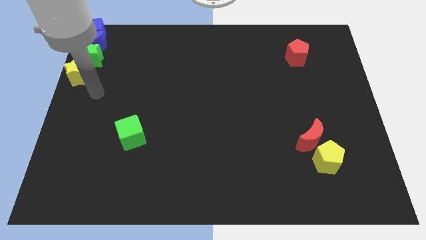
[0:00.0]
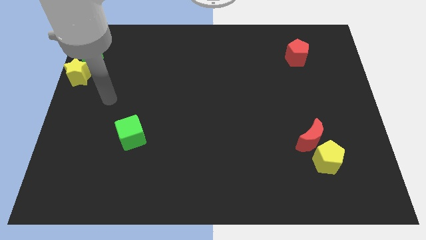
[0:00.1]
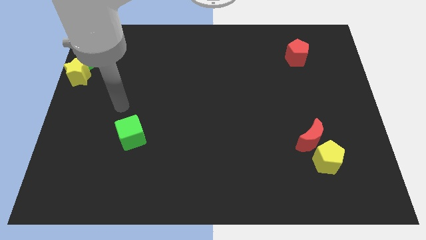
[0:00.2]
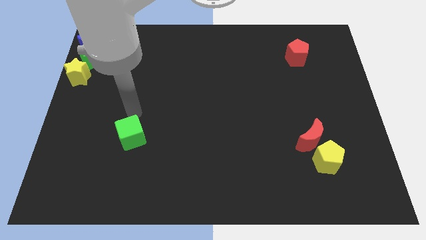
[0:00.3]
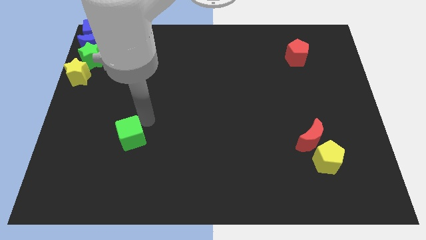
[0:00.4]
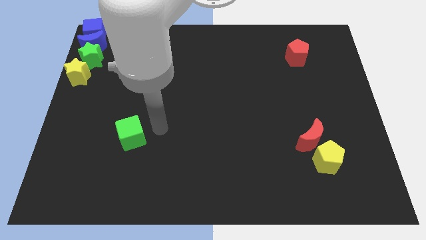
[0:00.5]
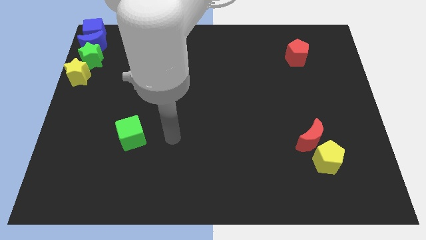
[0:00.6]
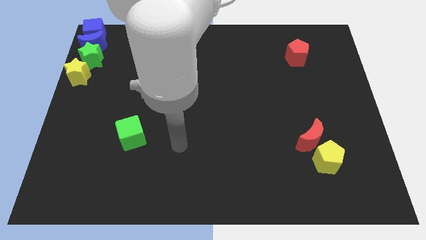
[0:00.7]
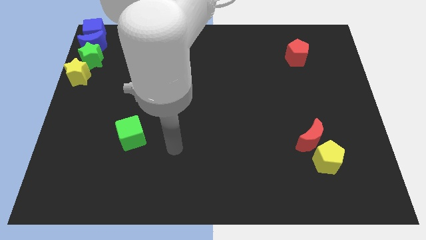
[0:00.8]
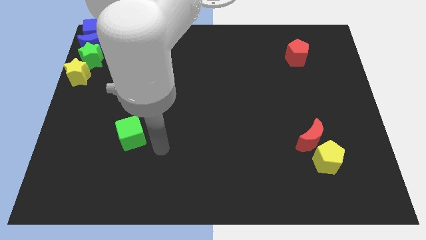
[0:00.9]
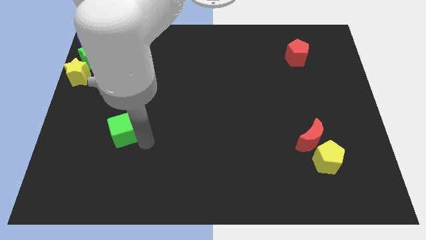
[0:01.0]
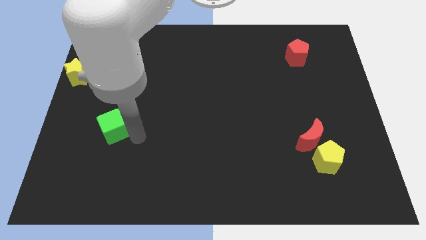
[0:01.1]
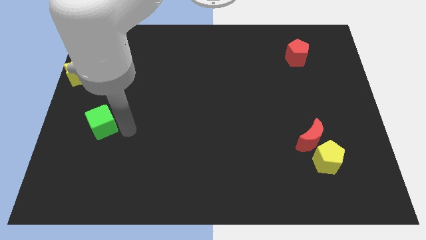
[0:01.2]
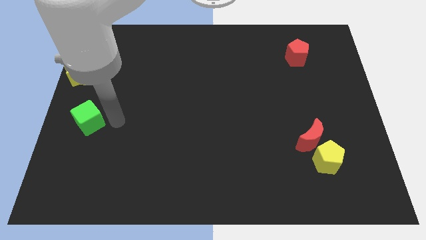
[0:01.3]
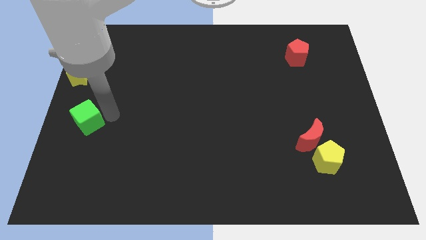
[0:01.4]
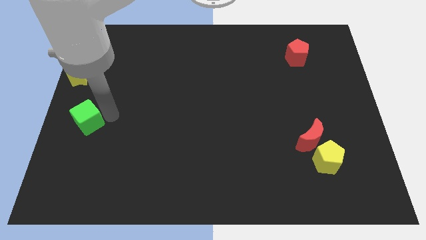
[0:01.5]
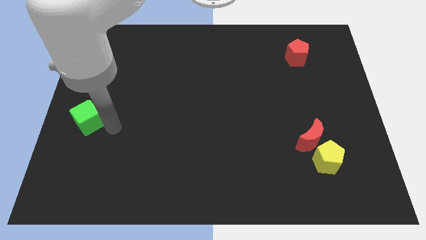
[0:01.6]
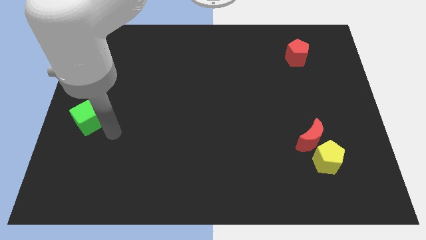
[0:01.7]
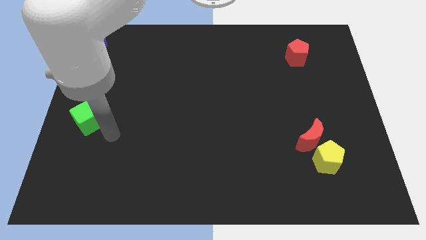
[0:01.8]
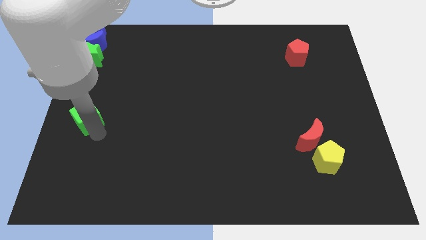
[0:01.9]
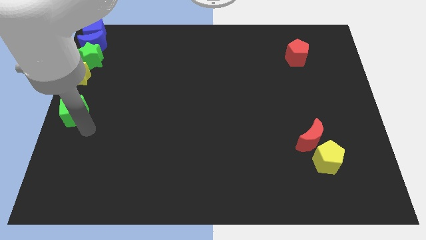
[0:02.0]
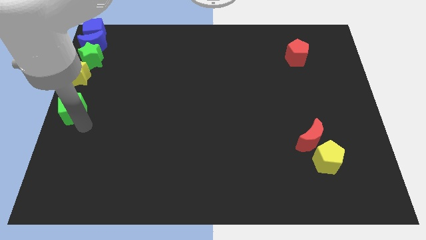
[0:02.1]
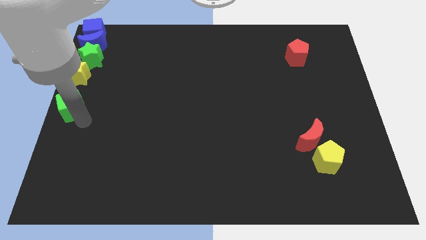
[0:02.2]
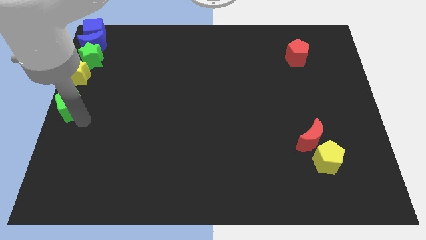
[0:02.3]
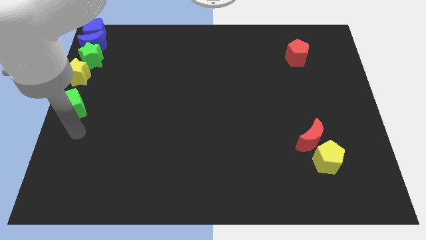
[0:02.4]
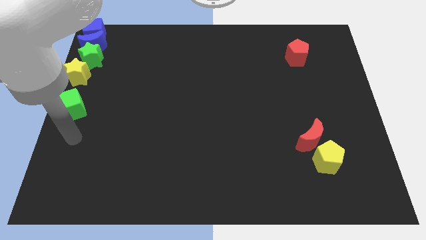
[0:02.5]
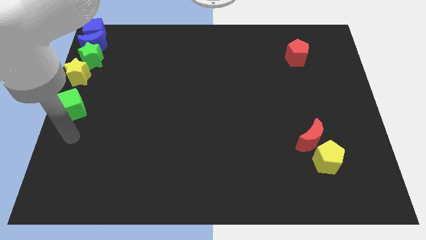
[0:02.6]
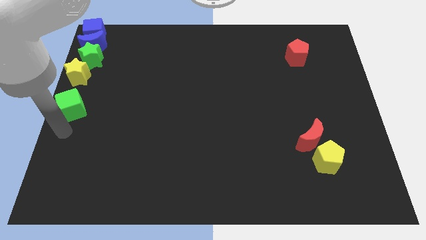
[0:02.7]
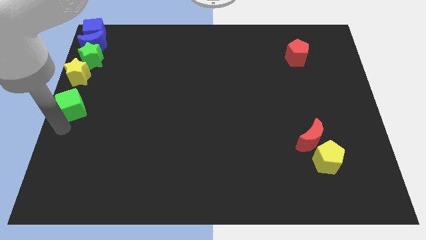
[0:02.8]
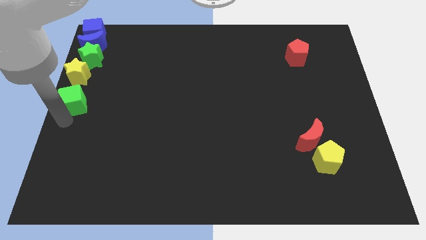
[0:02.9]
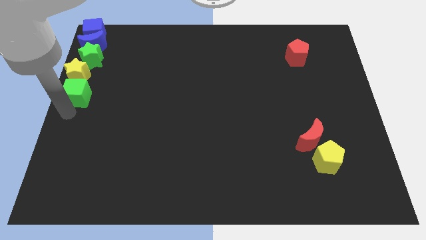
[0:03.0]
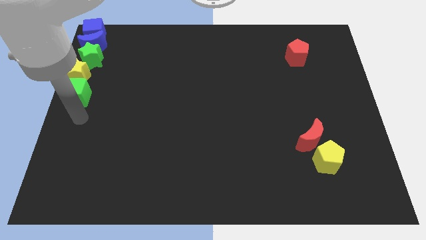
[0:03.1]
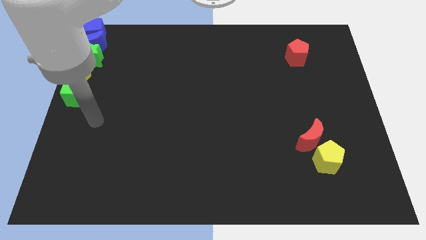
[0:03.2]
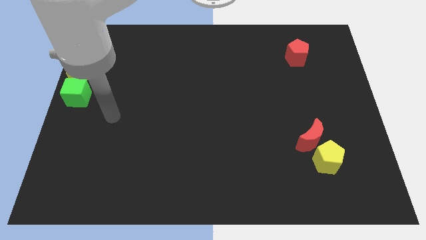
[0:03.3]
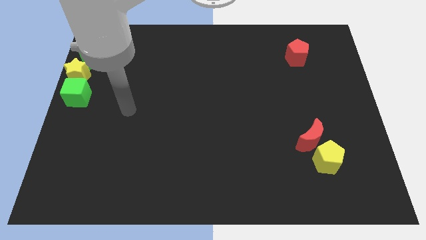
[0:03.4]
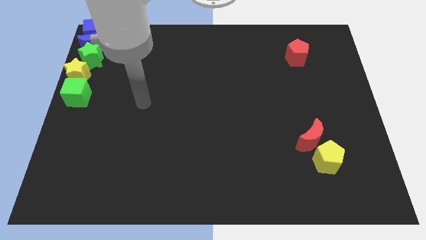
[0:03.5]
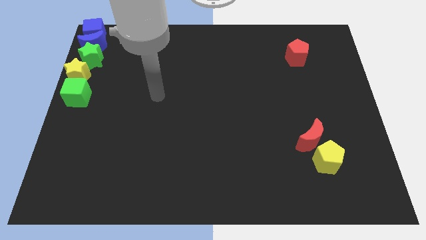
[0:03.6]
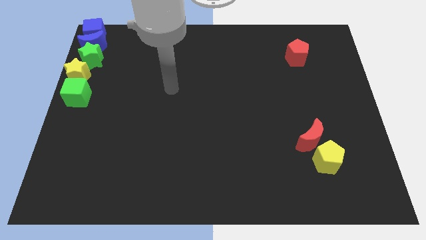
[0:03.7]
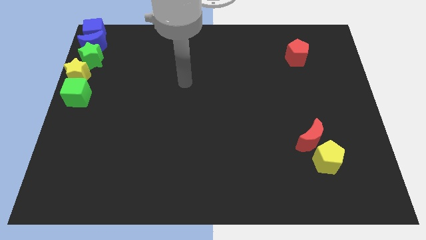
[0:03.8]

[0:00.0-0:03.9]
move the green cube to the center left

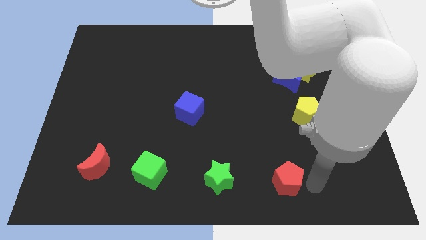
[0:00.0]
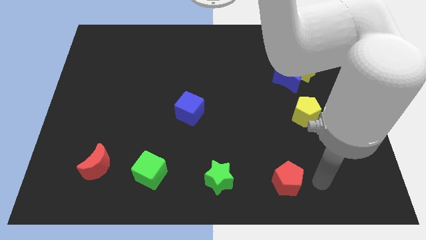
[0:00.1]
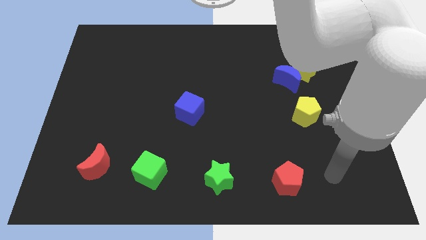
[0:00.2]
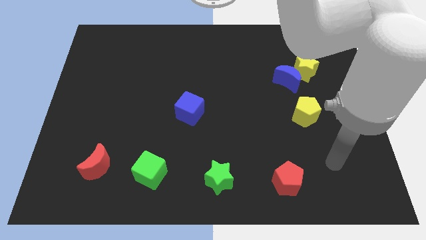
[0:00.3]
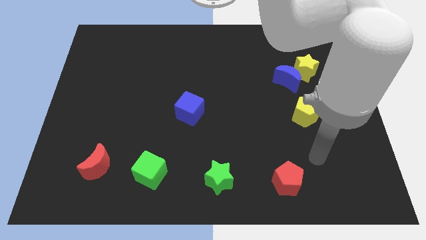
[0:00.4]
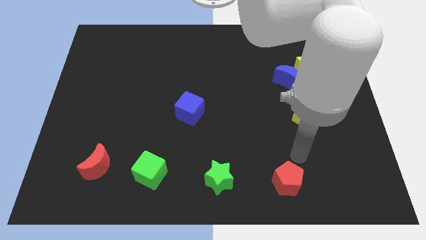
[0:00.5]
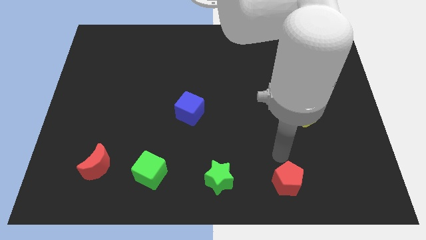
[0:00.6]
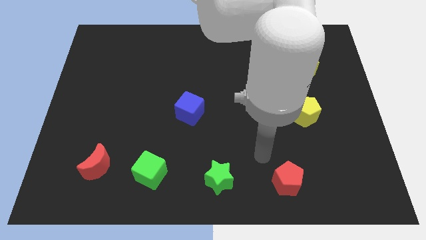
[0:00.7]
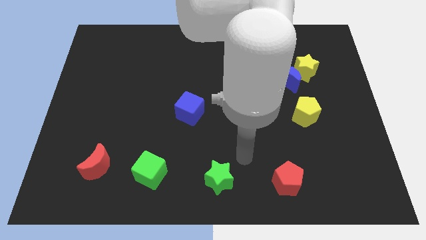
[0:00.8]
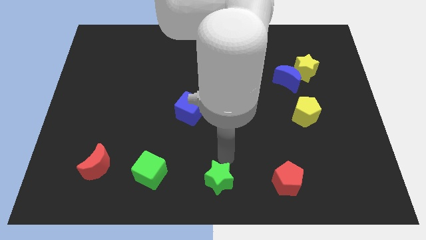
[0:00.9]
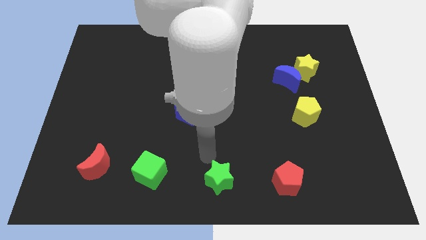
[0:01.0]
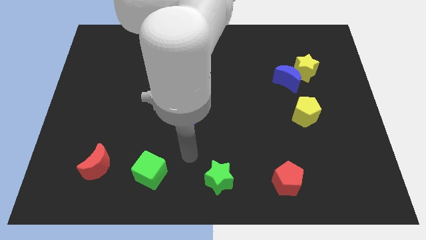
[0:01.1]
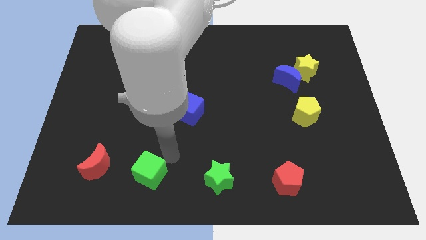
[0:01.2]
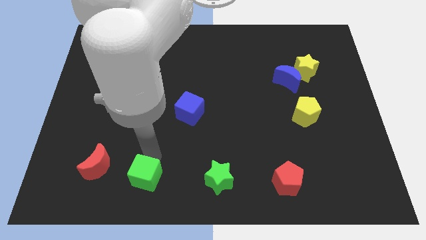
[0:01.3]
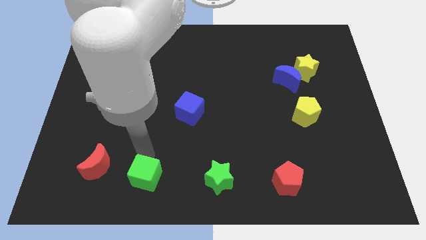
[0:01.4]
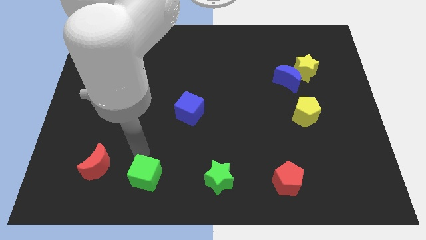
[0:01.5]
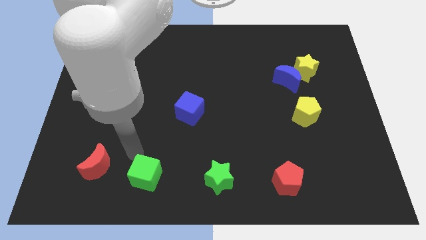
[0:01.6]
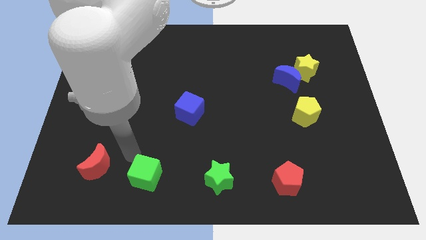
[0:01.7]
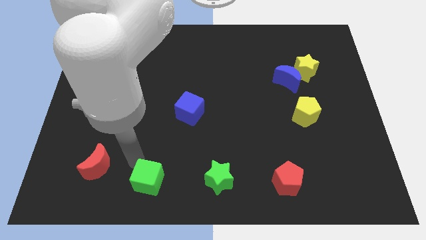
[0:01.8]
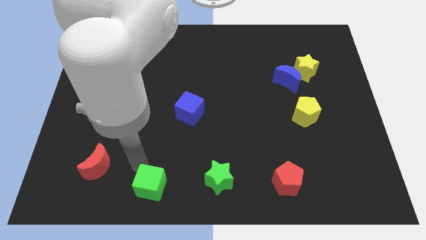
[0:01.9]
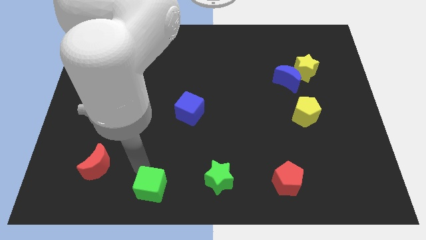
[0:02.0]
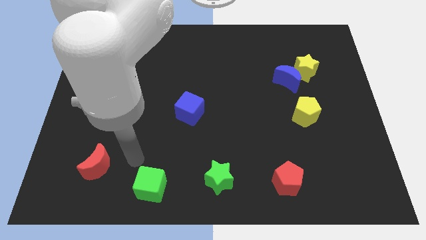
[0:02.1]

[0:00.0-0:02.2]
move the green cube in between the red moon and green star

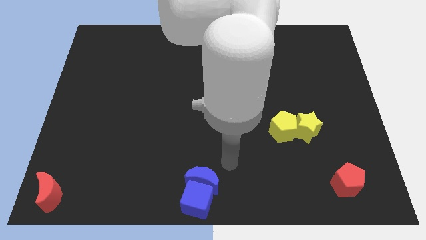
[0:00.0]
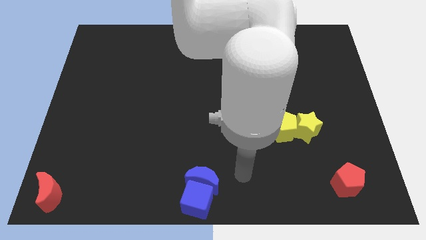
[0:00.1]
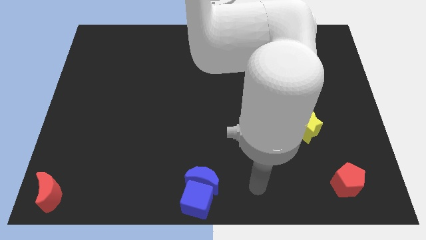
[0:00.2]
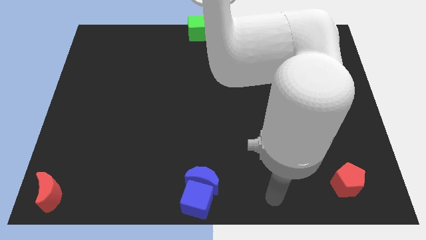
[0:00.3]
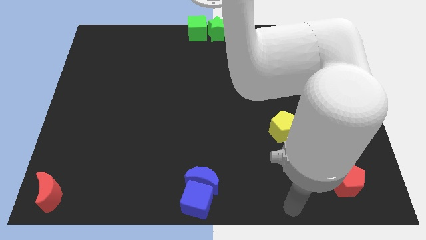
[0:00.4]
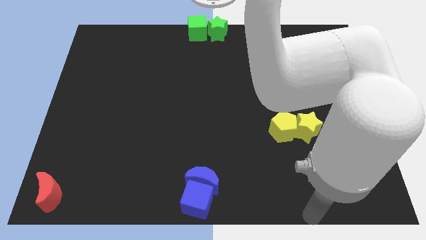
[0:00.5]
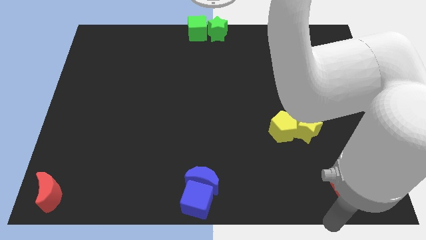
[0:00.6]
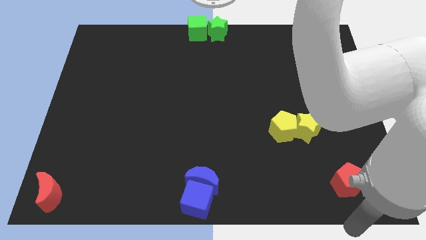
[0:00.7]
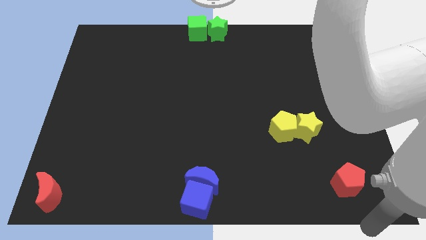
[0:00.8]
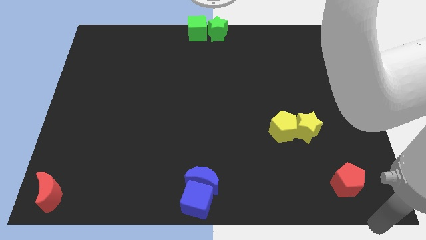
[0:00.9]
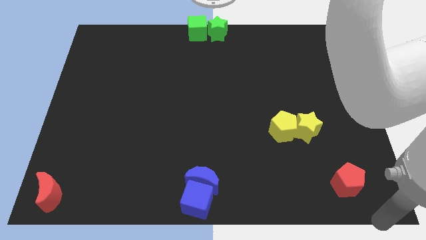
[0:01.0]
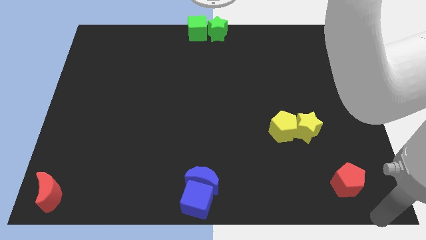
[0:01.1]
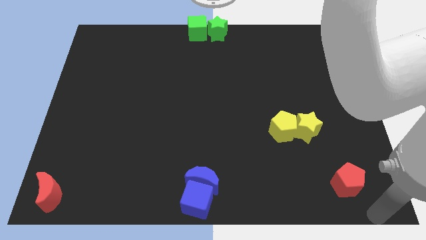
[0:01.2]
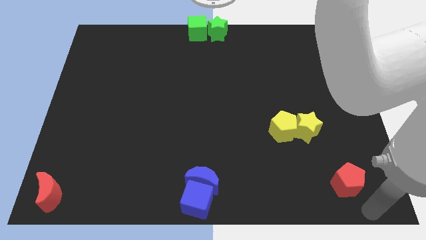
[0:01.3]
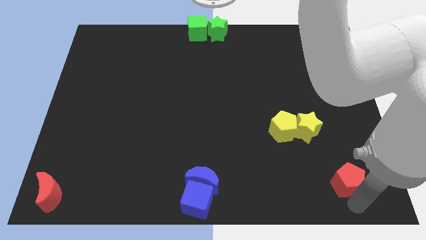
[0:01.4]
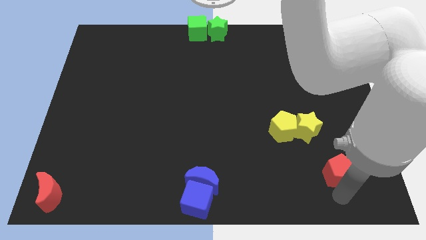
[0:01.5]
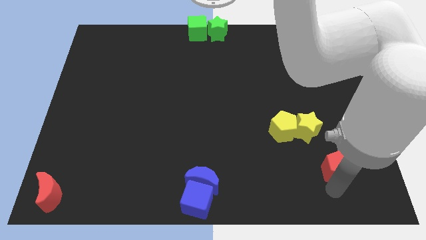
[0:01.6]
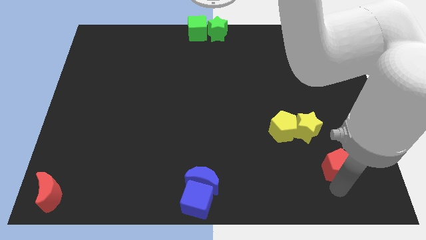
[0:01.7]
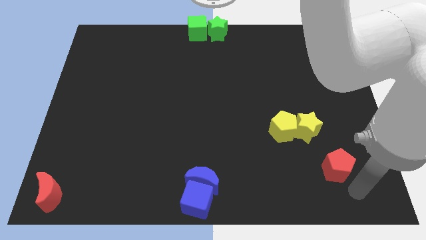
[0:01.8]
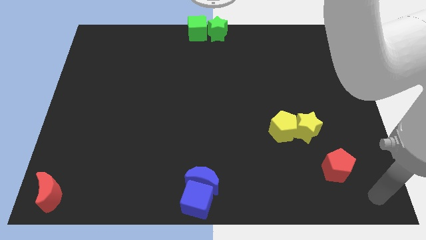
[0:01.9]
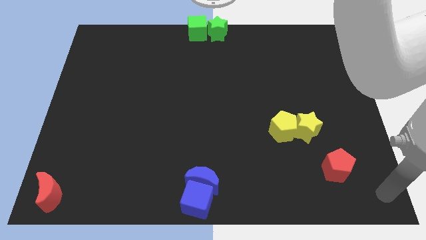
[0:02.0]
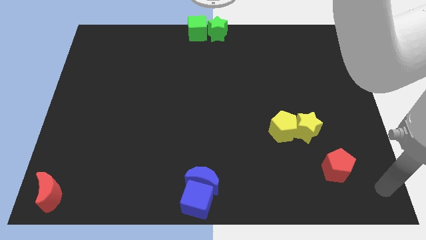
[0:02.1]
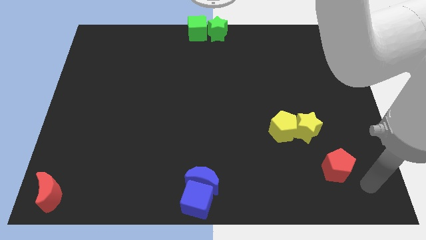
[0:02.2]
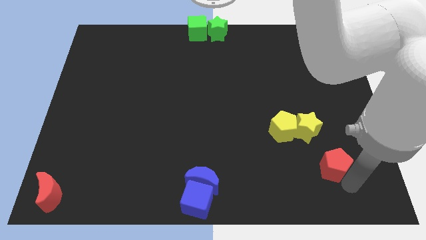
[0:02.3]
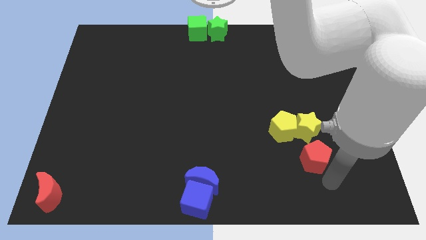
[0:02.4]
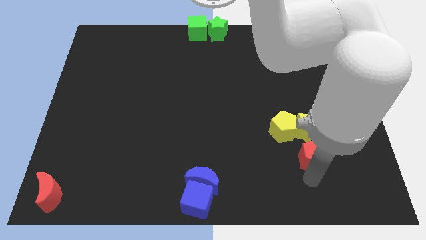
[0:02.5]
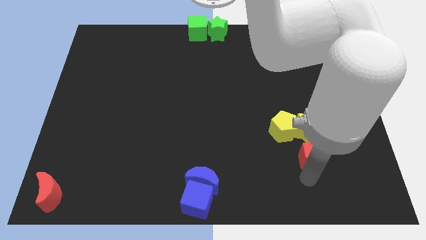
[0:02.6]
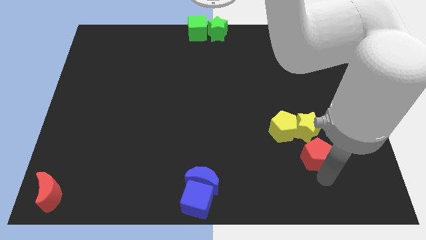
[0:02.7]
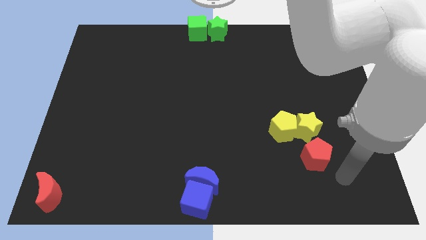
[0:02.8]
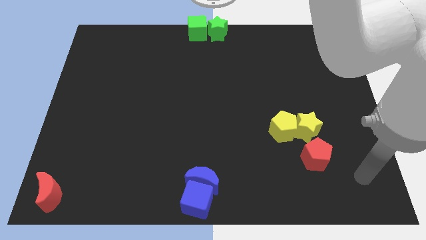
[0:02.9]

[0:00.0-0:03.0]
place red pentagon below yellow star
